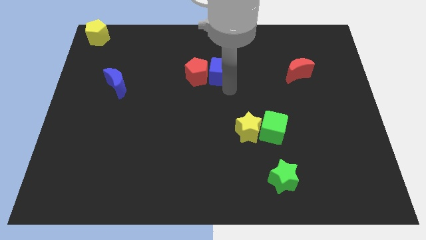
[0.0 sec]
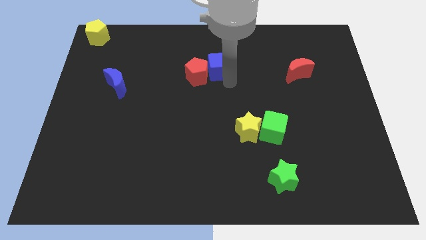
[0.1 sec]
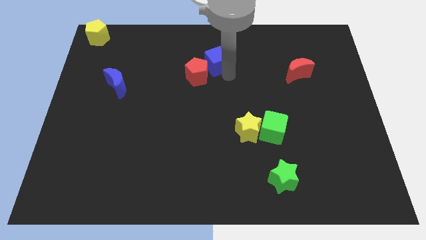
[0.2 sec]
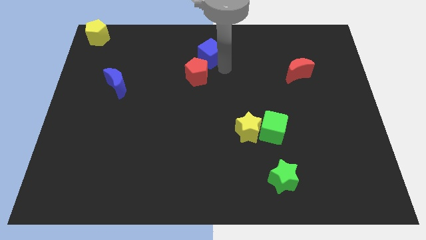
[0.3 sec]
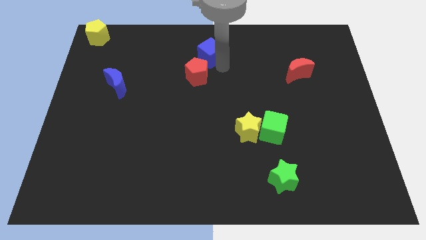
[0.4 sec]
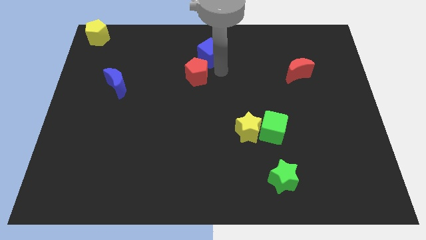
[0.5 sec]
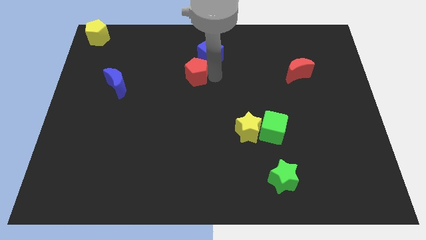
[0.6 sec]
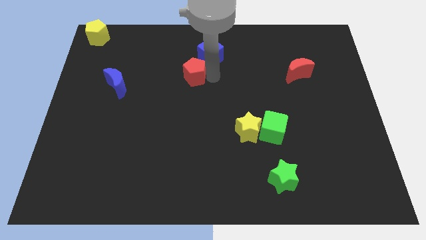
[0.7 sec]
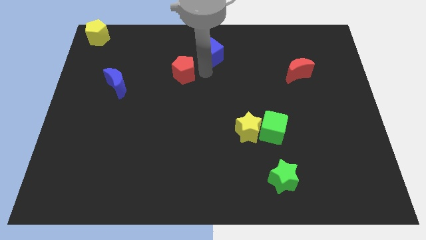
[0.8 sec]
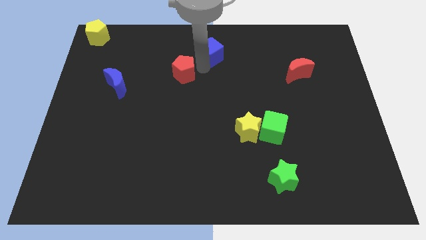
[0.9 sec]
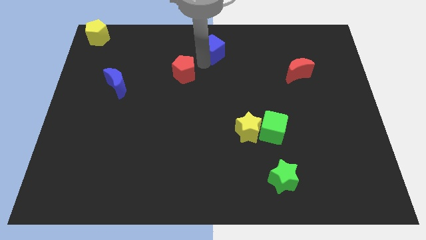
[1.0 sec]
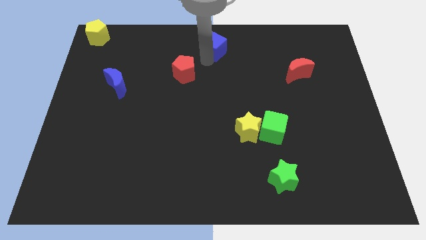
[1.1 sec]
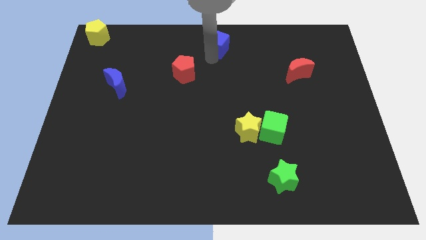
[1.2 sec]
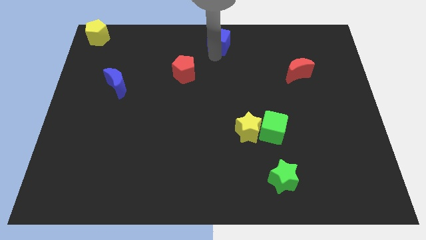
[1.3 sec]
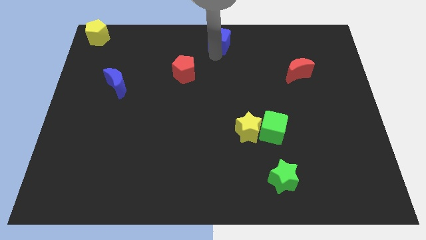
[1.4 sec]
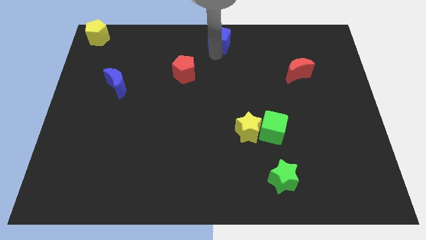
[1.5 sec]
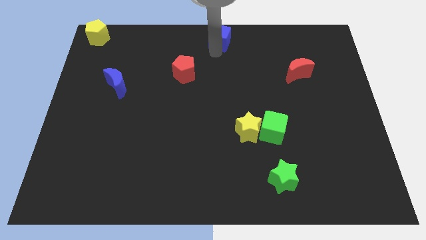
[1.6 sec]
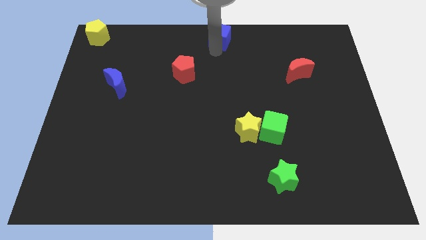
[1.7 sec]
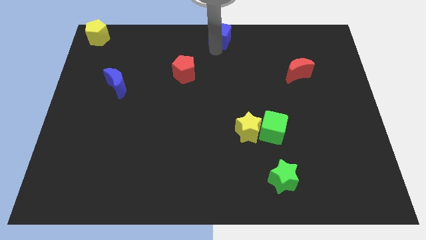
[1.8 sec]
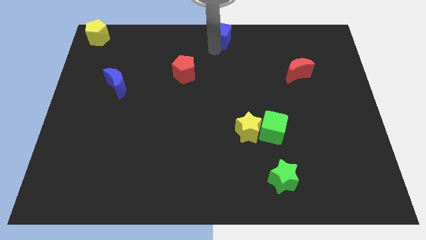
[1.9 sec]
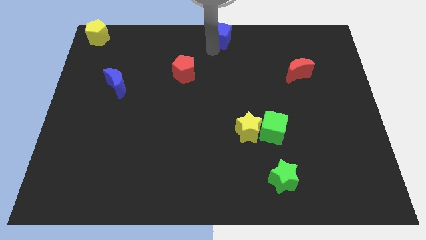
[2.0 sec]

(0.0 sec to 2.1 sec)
move the blue cube to the top of the board

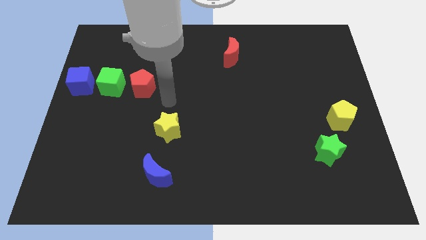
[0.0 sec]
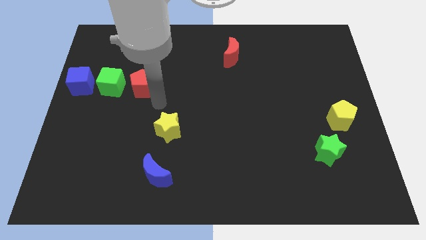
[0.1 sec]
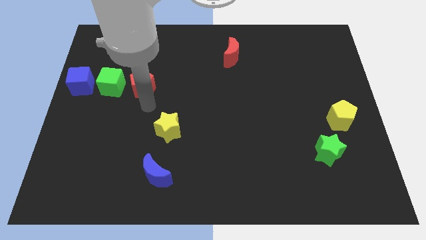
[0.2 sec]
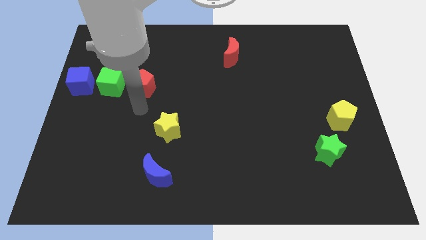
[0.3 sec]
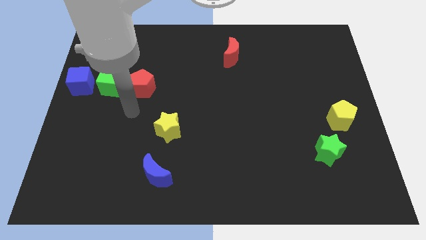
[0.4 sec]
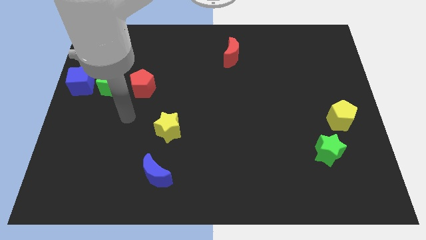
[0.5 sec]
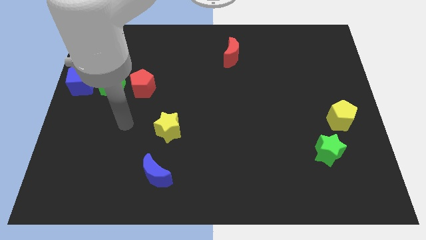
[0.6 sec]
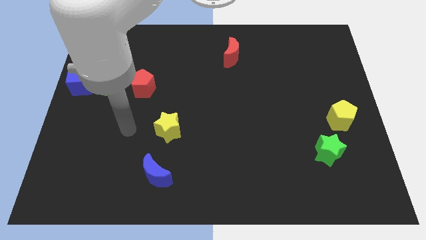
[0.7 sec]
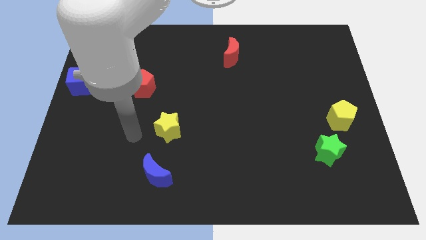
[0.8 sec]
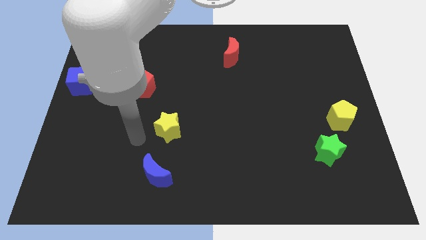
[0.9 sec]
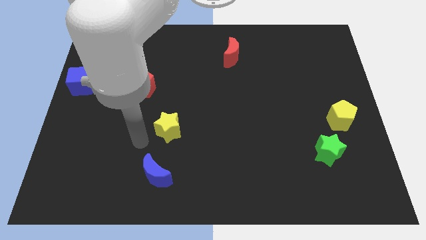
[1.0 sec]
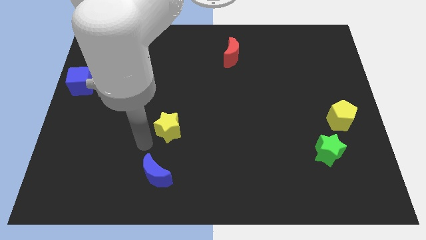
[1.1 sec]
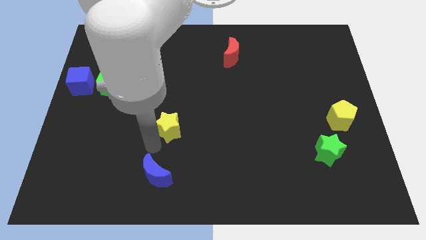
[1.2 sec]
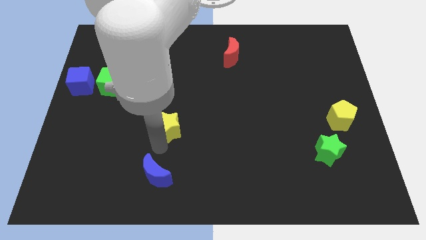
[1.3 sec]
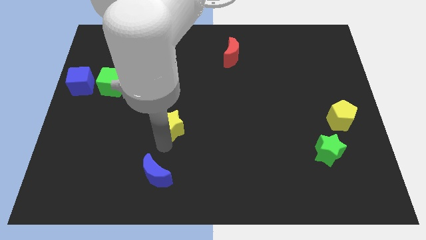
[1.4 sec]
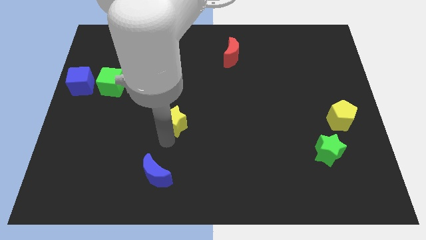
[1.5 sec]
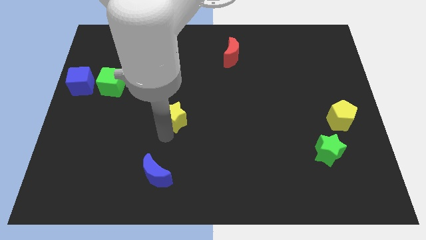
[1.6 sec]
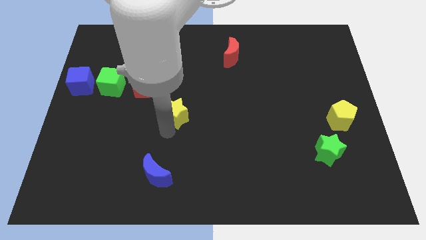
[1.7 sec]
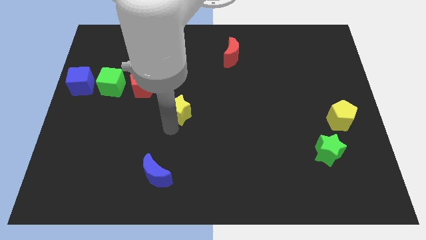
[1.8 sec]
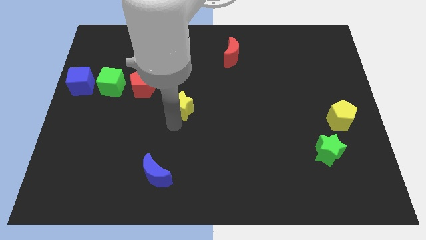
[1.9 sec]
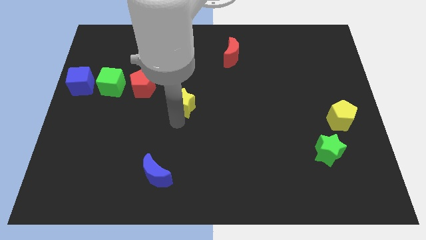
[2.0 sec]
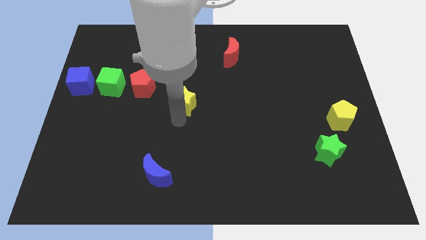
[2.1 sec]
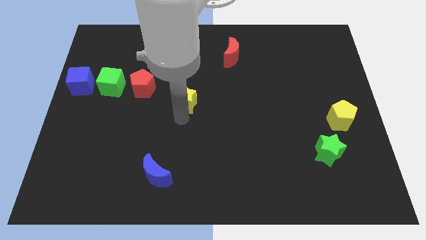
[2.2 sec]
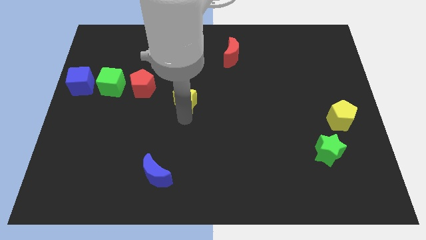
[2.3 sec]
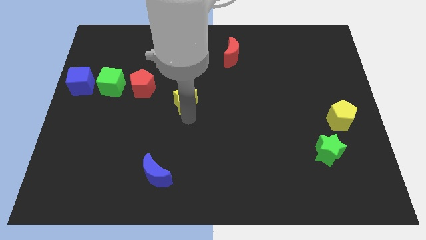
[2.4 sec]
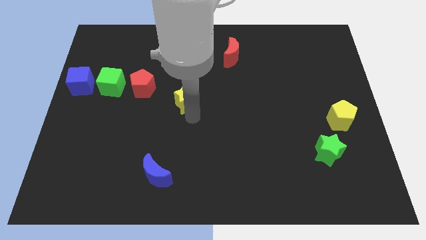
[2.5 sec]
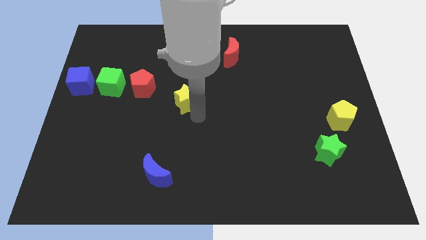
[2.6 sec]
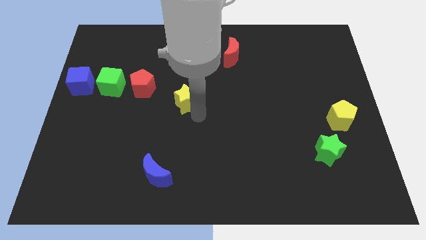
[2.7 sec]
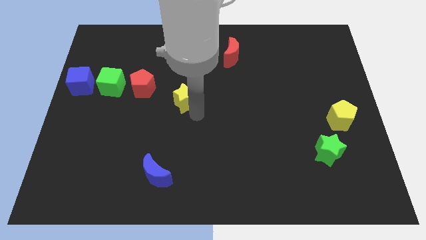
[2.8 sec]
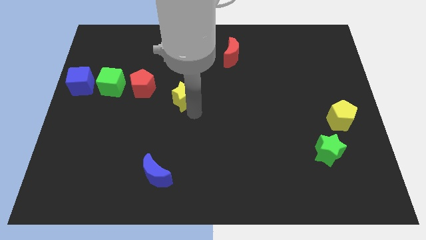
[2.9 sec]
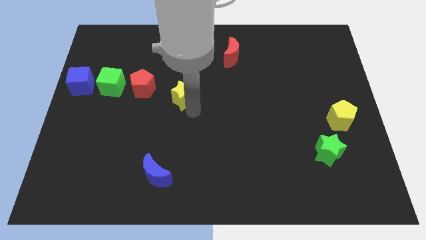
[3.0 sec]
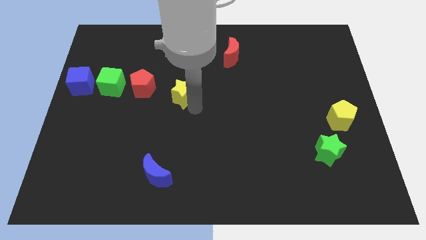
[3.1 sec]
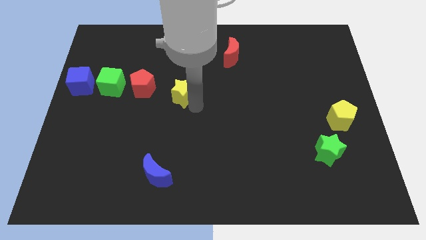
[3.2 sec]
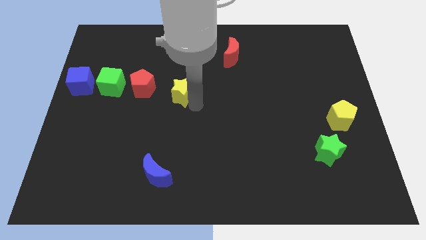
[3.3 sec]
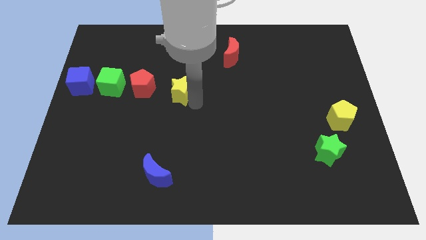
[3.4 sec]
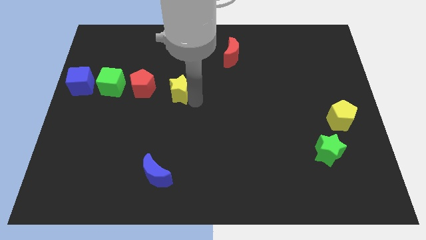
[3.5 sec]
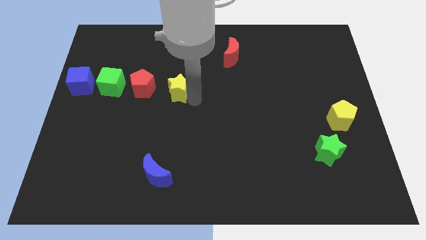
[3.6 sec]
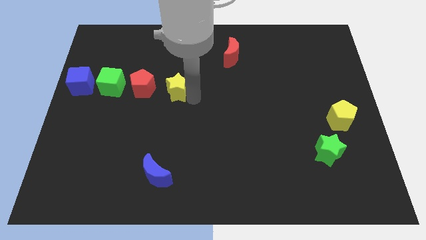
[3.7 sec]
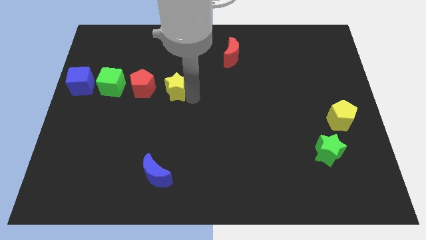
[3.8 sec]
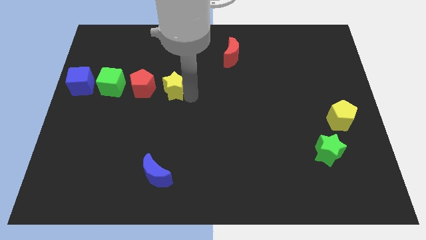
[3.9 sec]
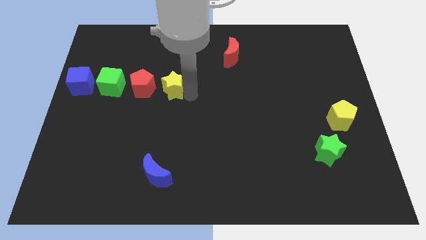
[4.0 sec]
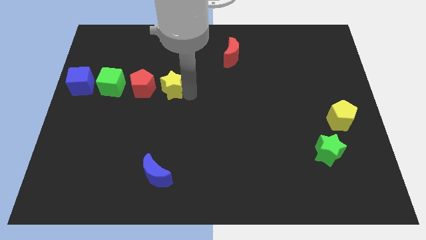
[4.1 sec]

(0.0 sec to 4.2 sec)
place the yellow star right to the red pentagon

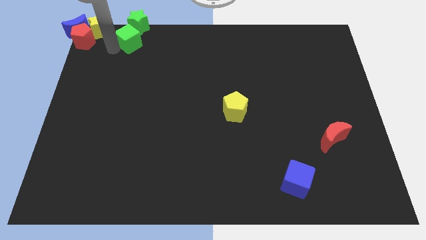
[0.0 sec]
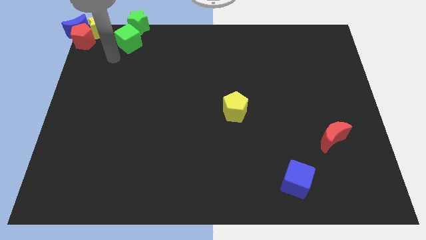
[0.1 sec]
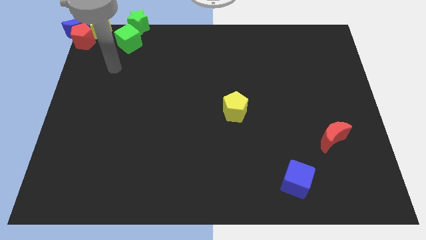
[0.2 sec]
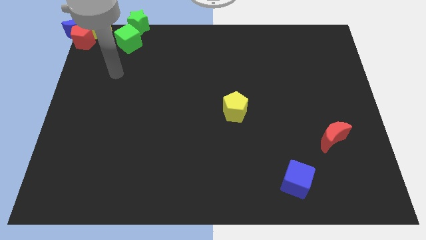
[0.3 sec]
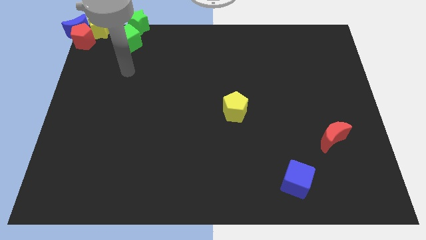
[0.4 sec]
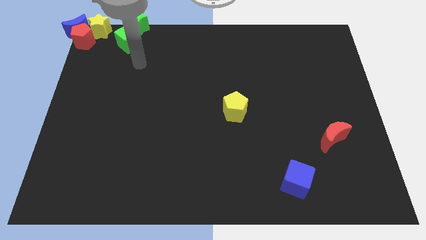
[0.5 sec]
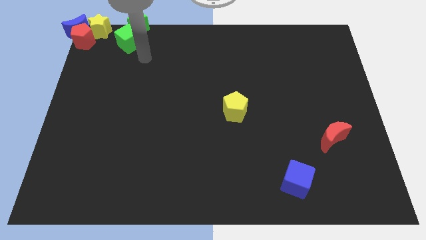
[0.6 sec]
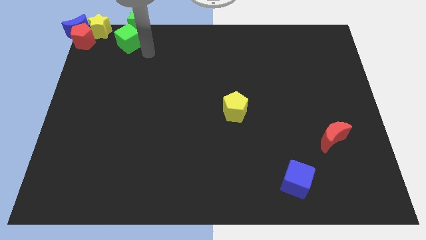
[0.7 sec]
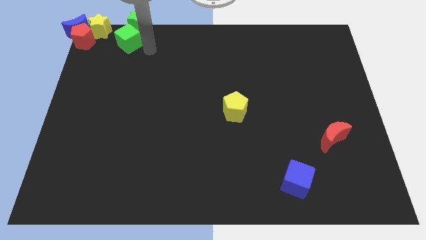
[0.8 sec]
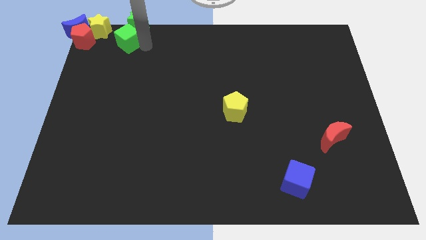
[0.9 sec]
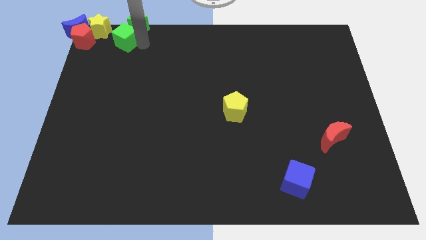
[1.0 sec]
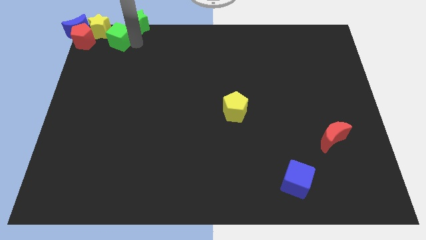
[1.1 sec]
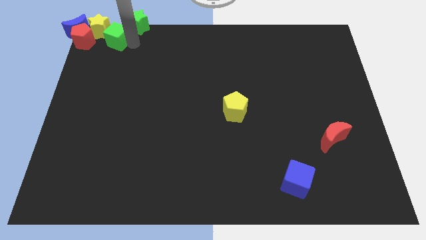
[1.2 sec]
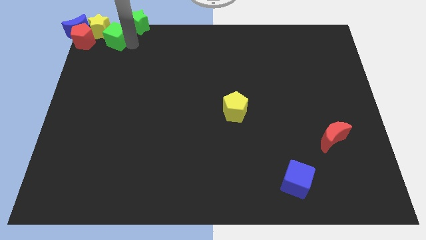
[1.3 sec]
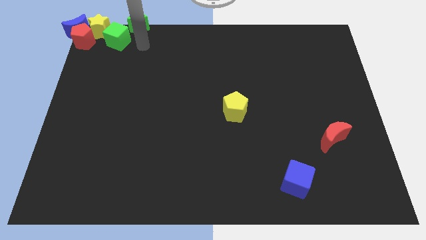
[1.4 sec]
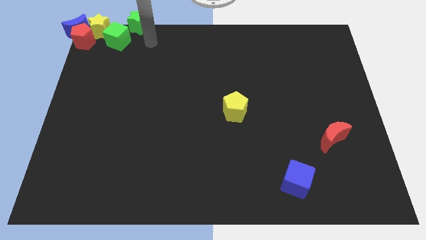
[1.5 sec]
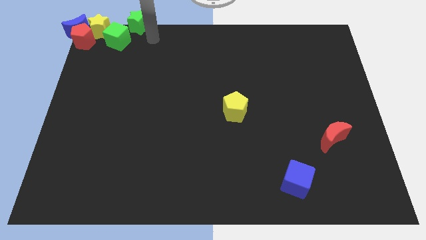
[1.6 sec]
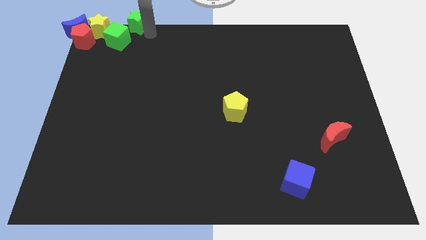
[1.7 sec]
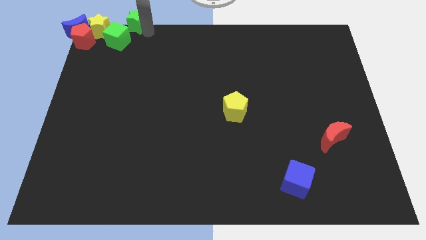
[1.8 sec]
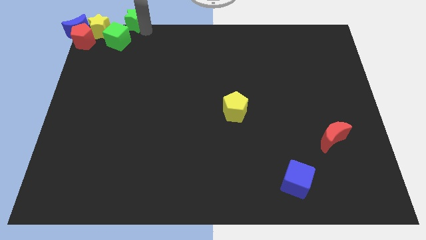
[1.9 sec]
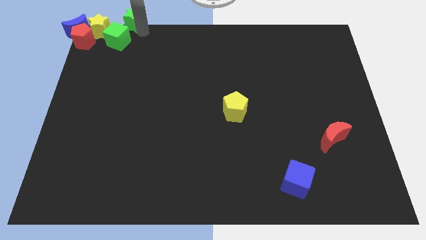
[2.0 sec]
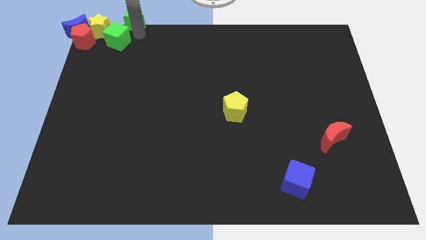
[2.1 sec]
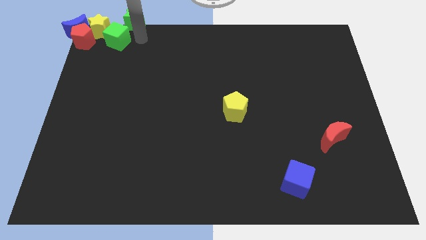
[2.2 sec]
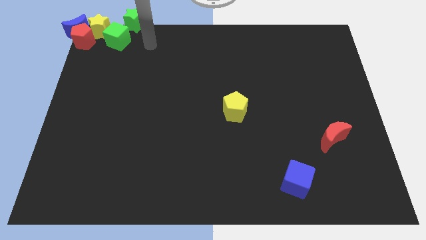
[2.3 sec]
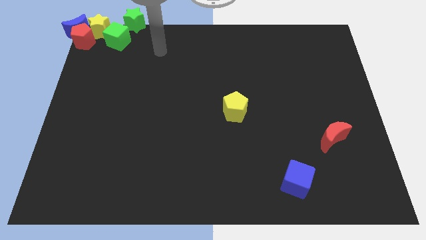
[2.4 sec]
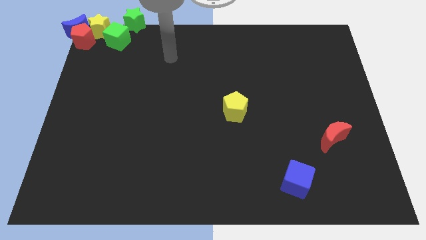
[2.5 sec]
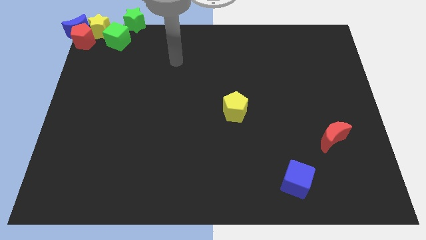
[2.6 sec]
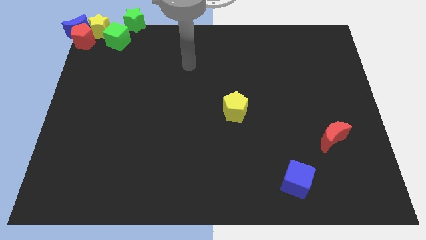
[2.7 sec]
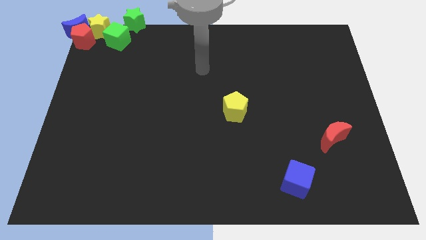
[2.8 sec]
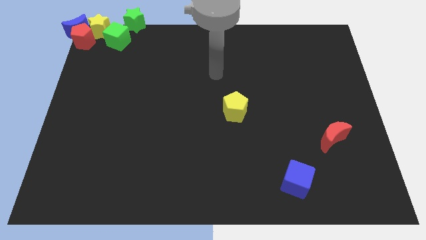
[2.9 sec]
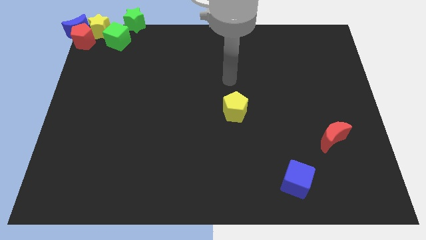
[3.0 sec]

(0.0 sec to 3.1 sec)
push the green blocks towards the group of blocks
